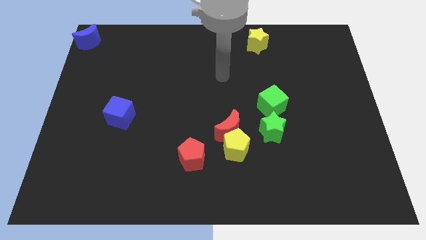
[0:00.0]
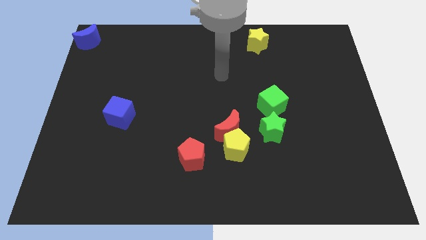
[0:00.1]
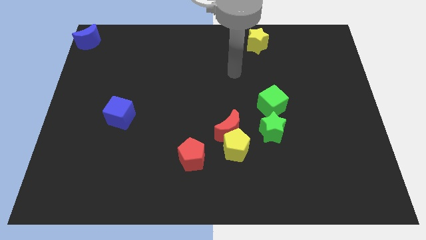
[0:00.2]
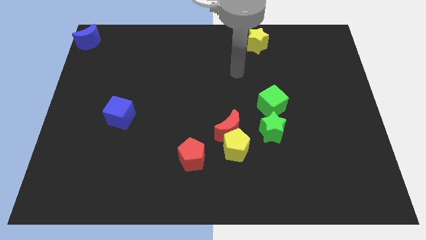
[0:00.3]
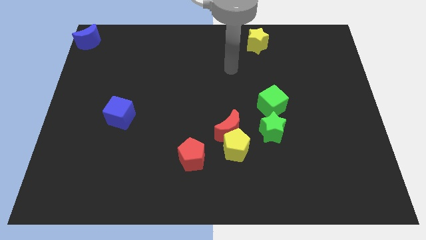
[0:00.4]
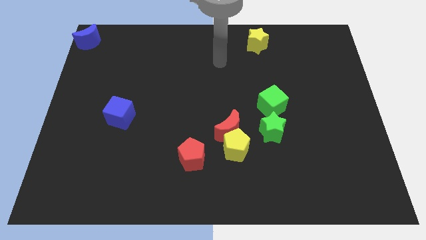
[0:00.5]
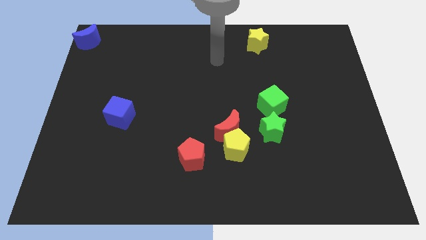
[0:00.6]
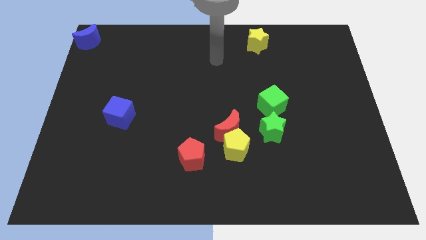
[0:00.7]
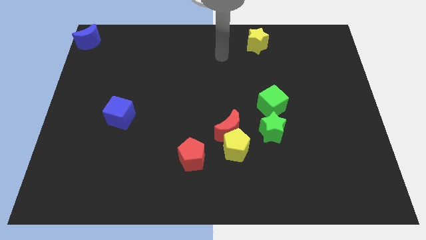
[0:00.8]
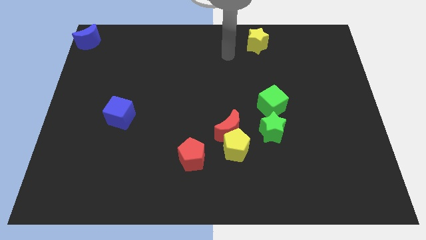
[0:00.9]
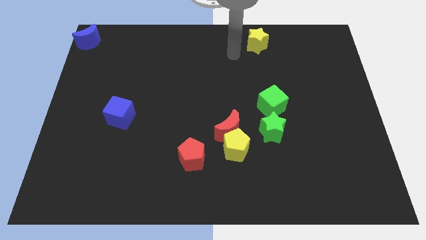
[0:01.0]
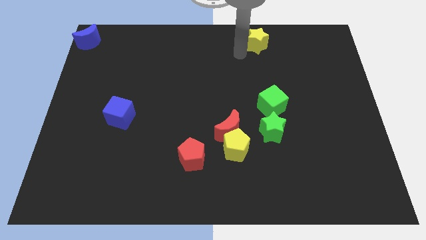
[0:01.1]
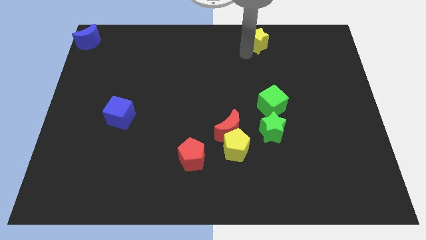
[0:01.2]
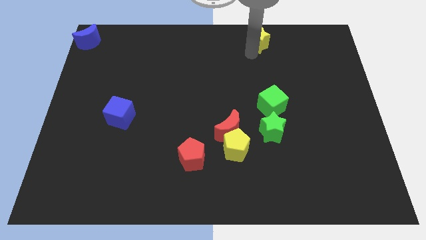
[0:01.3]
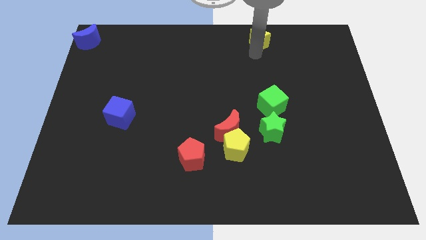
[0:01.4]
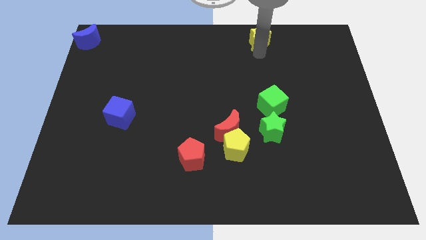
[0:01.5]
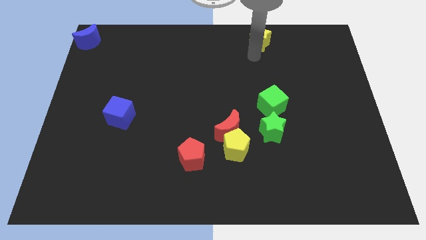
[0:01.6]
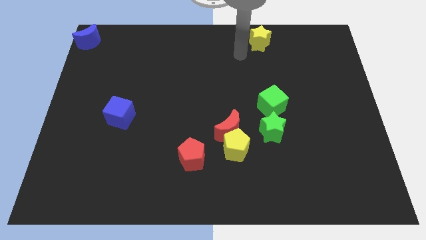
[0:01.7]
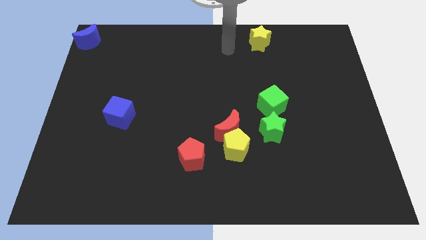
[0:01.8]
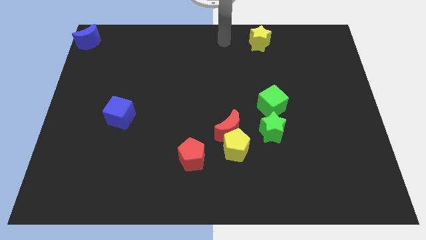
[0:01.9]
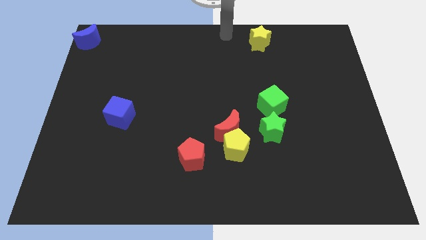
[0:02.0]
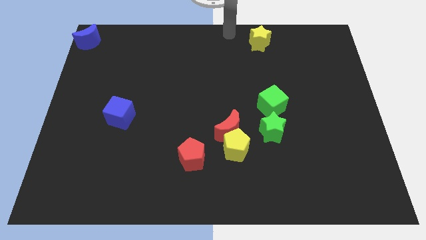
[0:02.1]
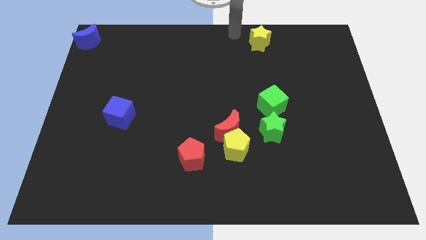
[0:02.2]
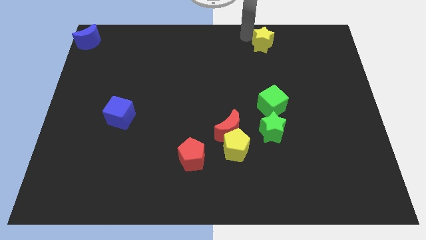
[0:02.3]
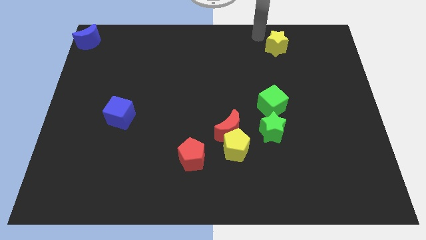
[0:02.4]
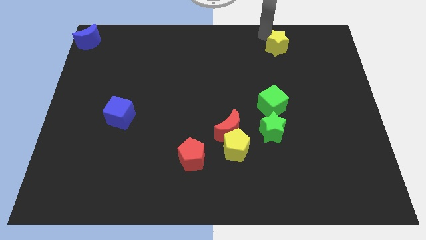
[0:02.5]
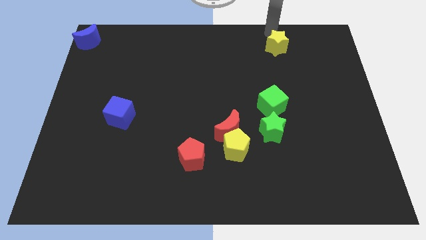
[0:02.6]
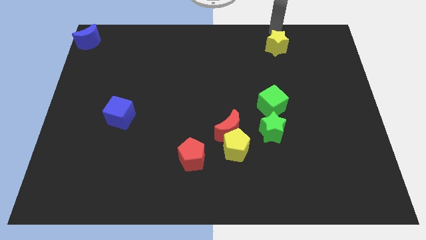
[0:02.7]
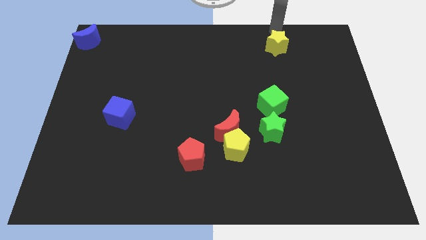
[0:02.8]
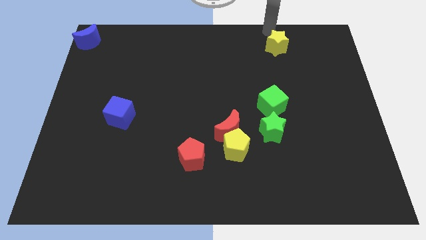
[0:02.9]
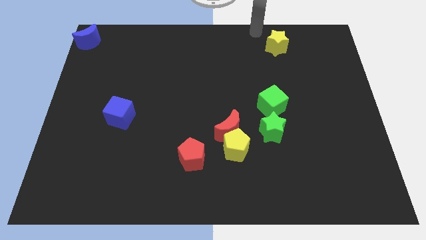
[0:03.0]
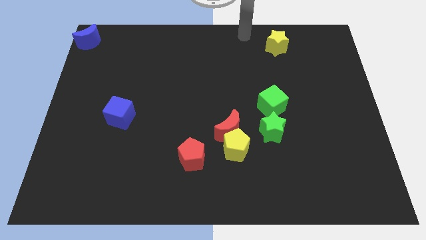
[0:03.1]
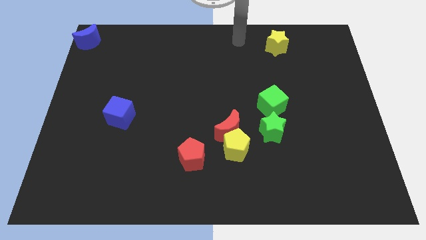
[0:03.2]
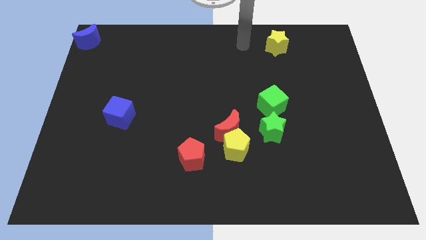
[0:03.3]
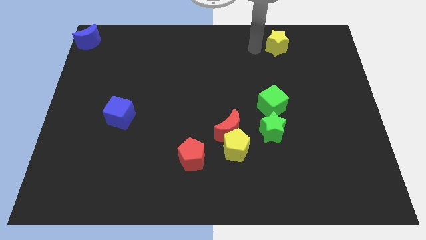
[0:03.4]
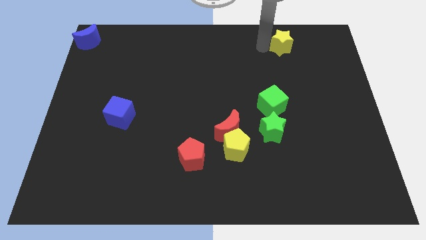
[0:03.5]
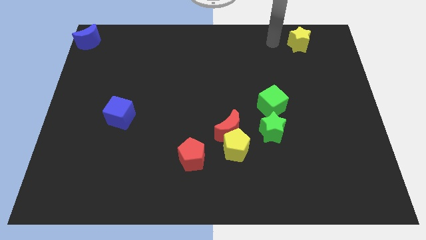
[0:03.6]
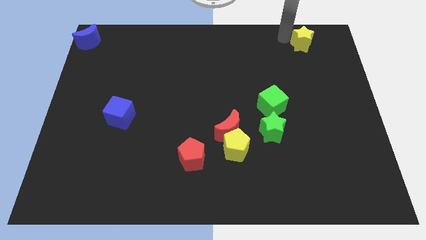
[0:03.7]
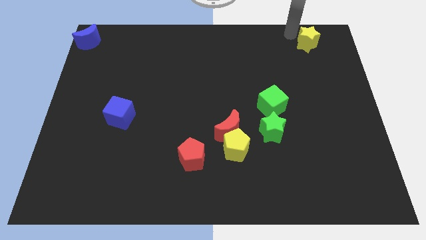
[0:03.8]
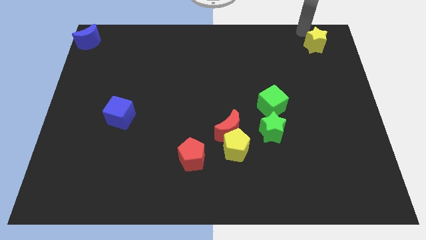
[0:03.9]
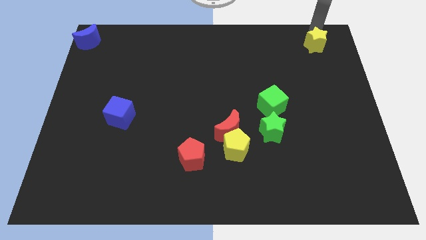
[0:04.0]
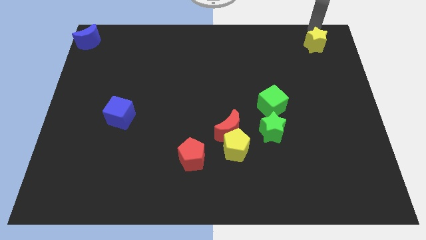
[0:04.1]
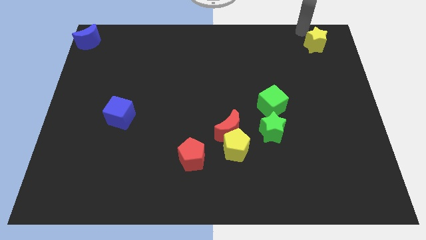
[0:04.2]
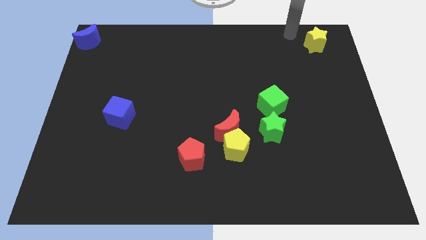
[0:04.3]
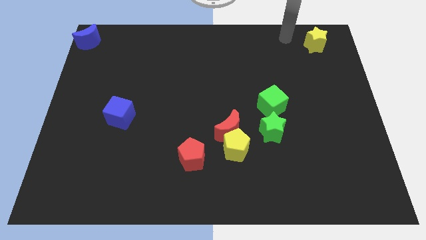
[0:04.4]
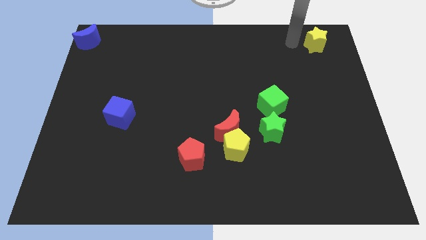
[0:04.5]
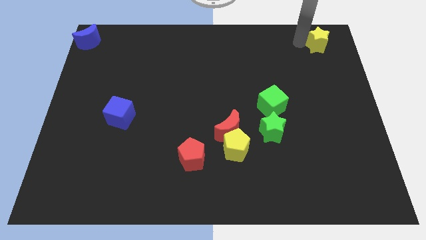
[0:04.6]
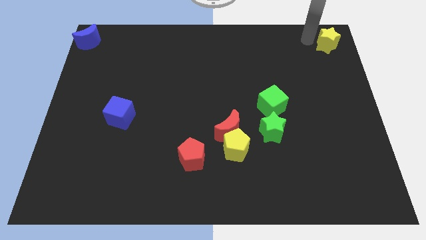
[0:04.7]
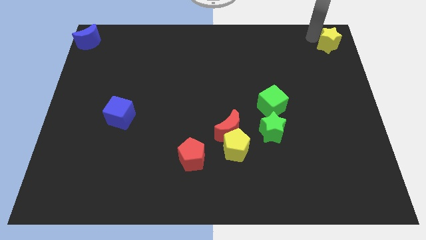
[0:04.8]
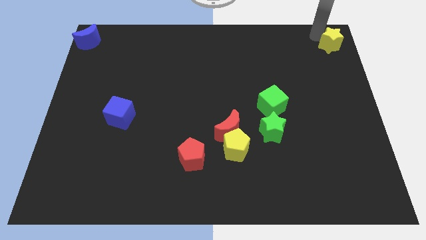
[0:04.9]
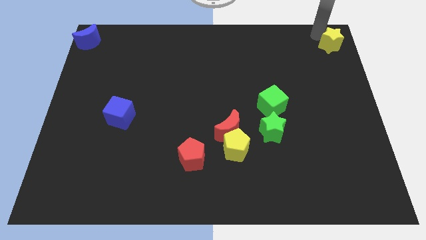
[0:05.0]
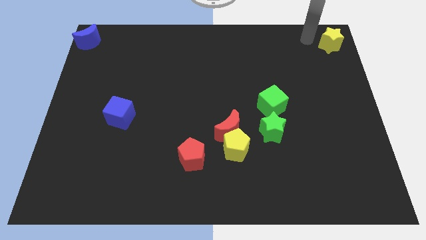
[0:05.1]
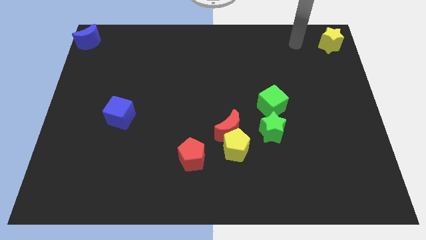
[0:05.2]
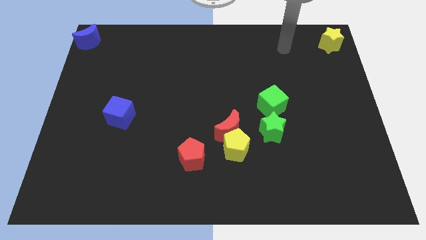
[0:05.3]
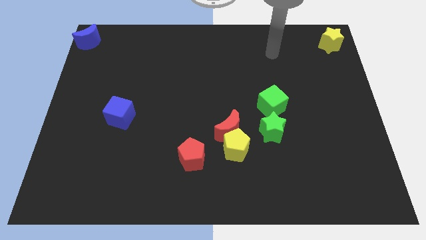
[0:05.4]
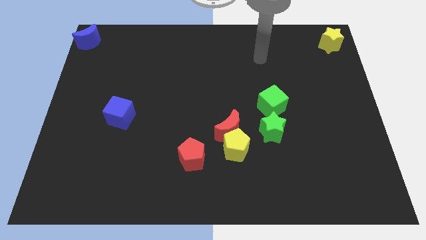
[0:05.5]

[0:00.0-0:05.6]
slide the yellow star slightly to the right

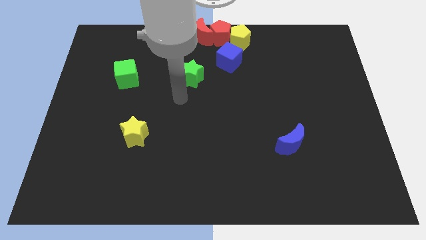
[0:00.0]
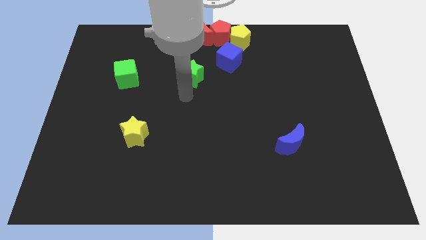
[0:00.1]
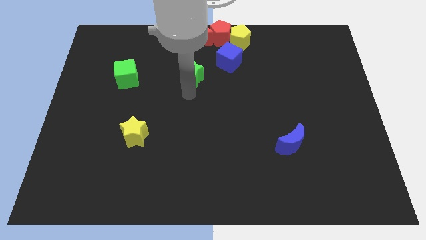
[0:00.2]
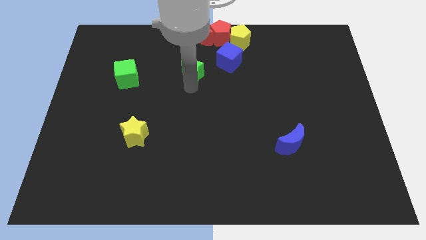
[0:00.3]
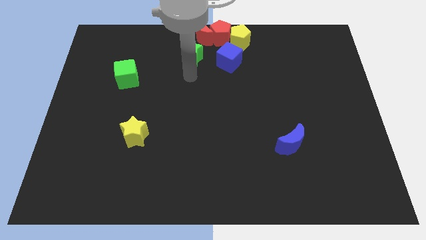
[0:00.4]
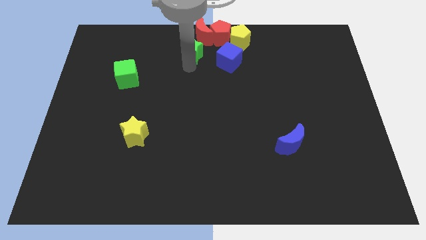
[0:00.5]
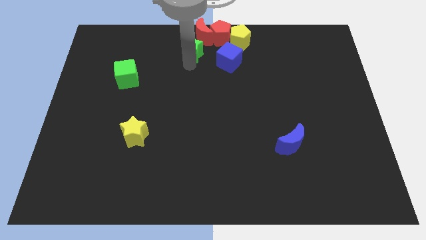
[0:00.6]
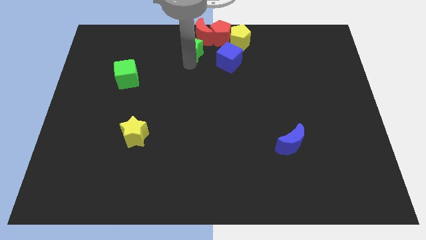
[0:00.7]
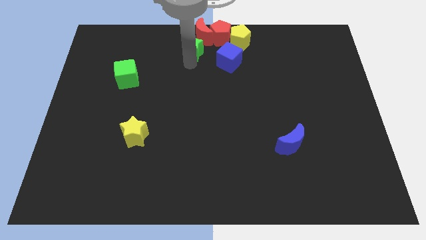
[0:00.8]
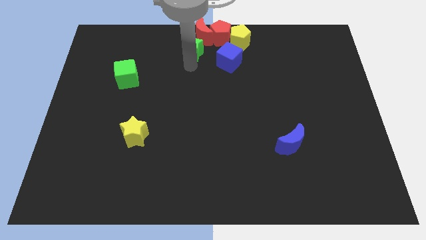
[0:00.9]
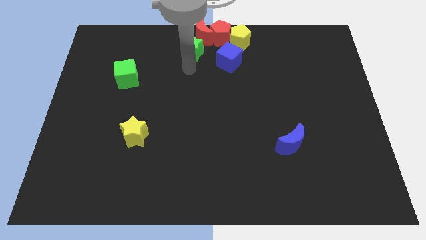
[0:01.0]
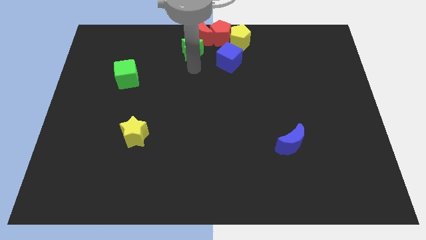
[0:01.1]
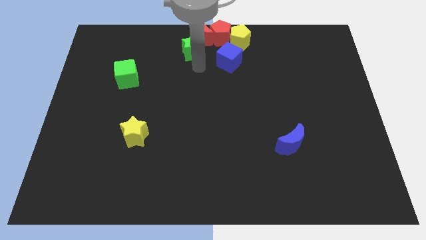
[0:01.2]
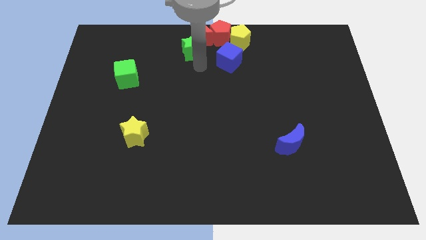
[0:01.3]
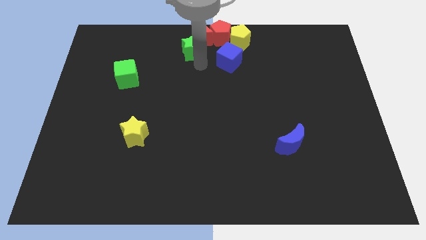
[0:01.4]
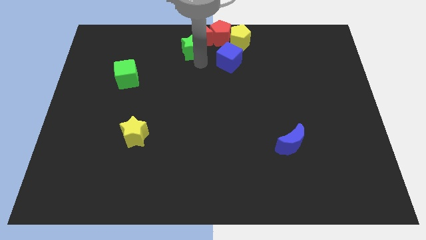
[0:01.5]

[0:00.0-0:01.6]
push the green star towards the red crescent

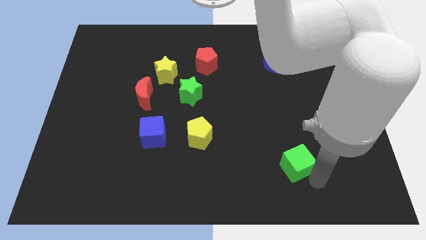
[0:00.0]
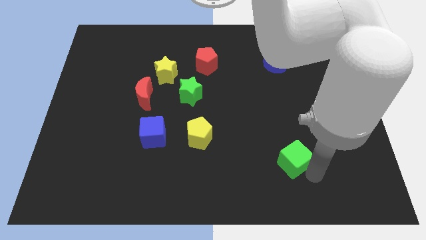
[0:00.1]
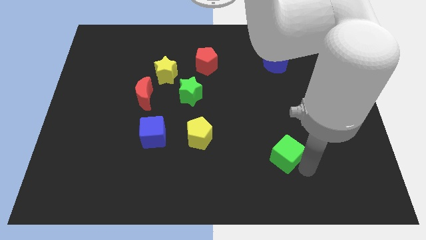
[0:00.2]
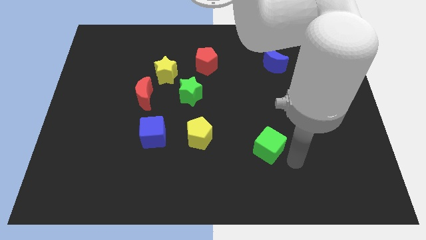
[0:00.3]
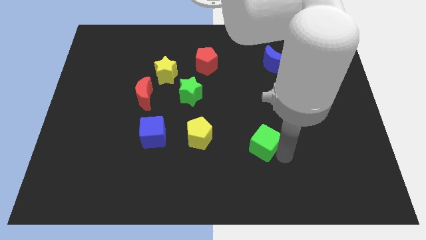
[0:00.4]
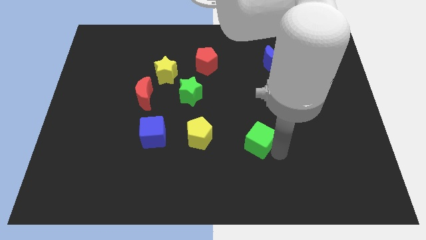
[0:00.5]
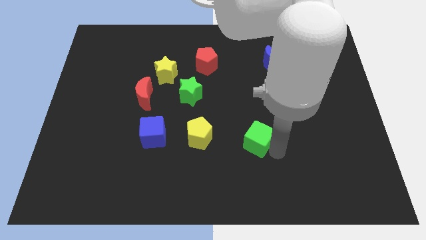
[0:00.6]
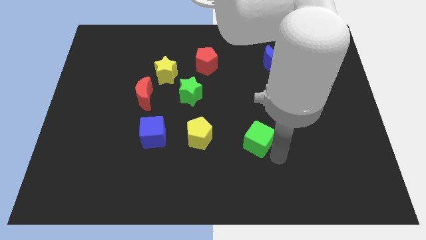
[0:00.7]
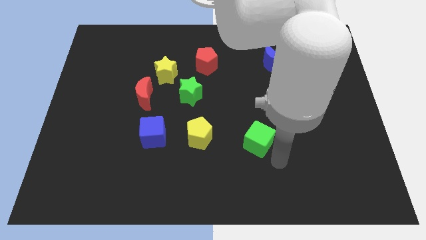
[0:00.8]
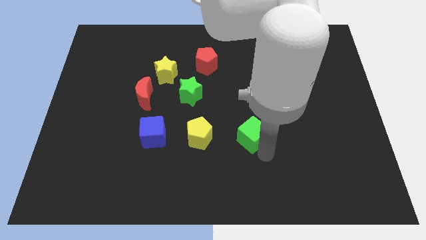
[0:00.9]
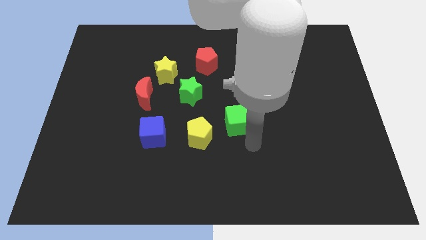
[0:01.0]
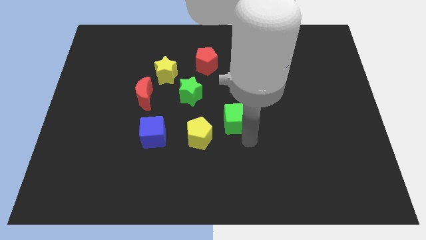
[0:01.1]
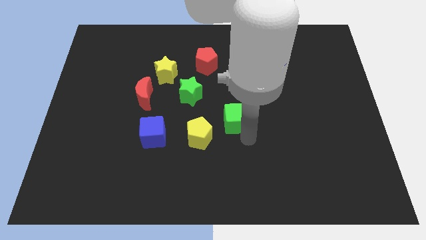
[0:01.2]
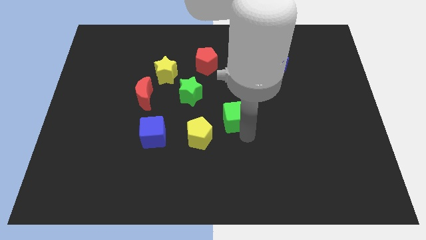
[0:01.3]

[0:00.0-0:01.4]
push the green cube towards the red pentagon

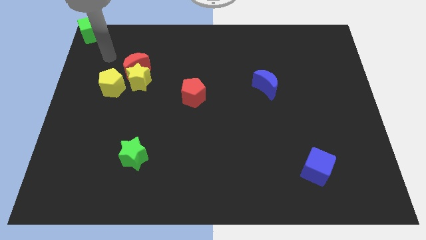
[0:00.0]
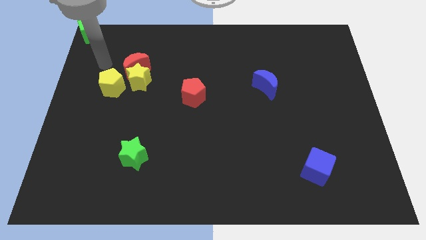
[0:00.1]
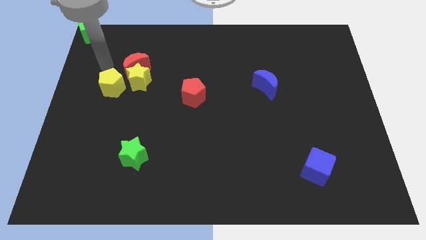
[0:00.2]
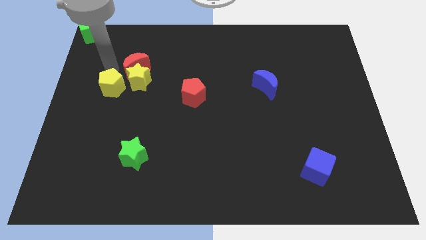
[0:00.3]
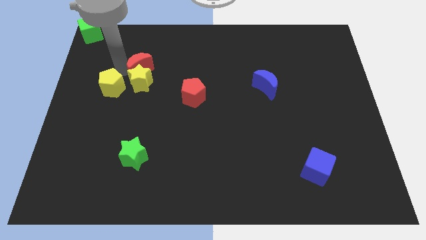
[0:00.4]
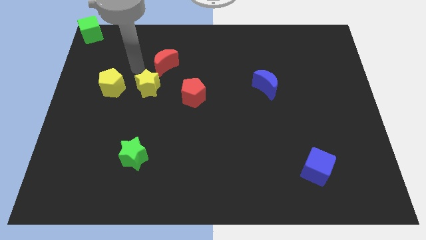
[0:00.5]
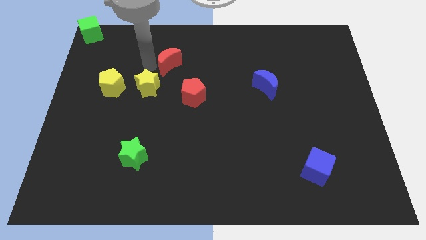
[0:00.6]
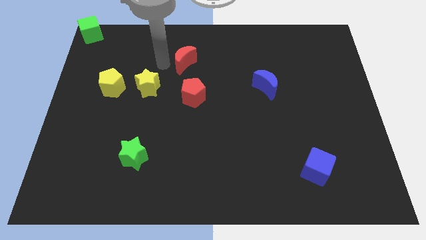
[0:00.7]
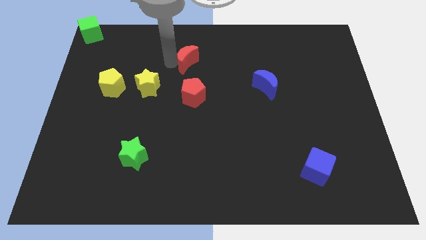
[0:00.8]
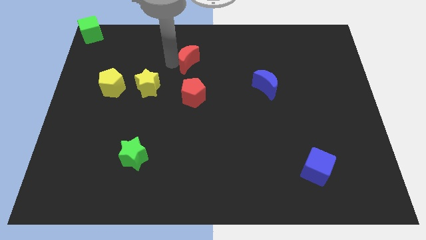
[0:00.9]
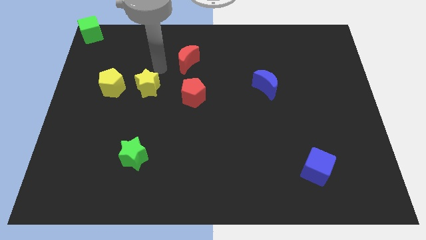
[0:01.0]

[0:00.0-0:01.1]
place the red moon above the red pentagon
